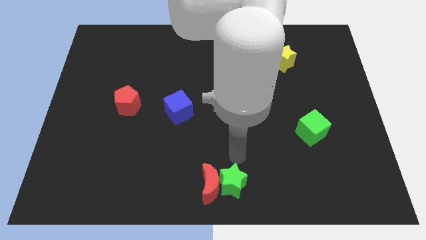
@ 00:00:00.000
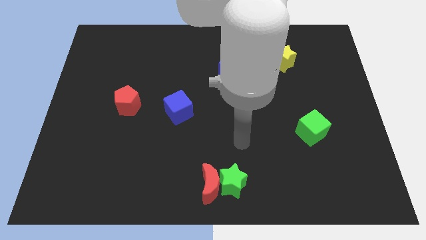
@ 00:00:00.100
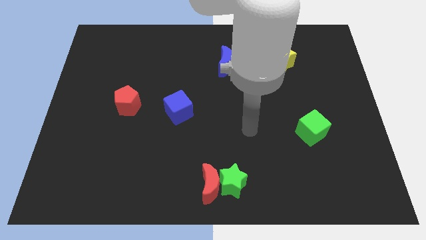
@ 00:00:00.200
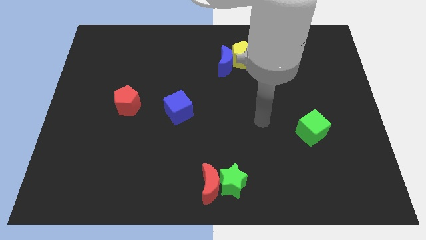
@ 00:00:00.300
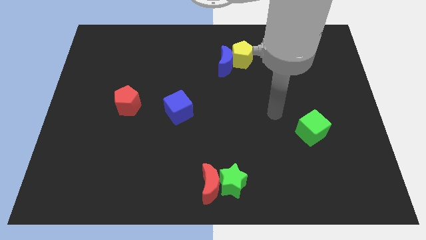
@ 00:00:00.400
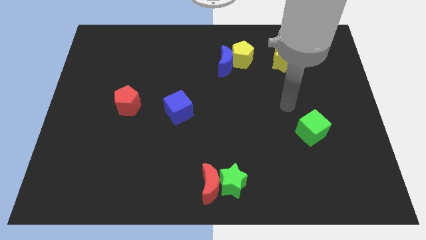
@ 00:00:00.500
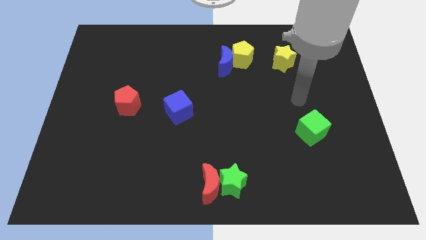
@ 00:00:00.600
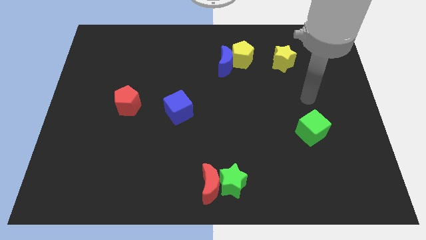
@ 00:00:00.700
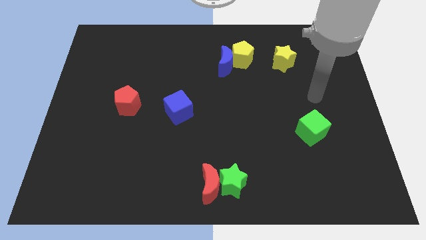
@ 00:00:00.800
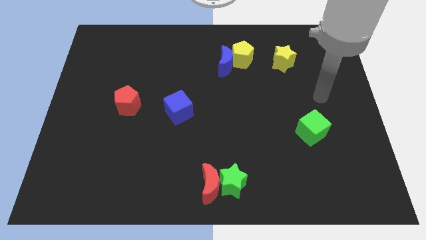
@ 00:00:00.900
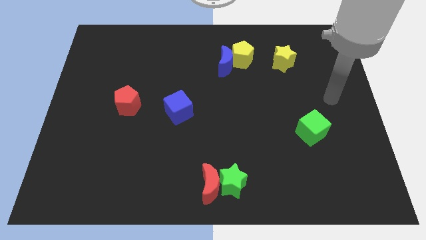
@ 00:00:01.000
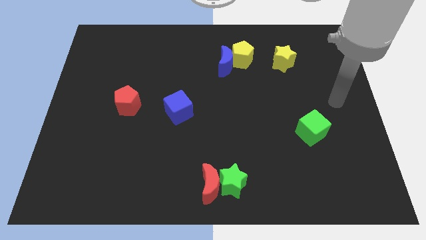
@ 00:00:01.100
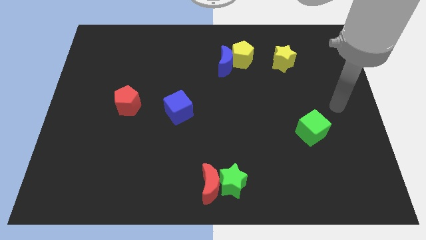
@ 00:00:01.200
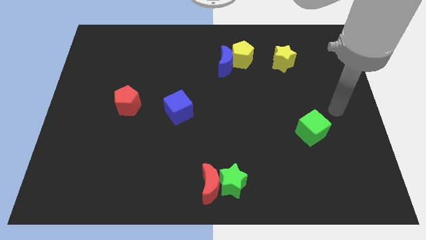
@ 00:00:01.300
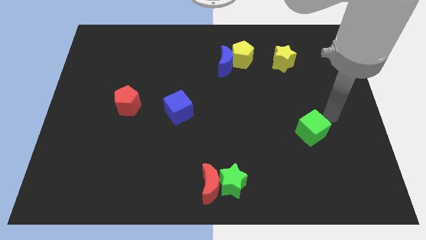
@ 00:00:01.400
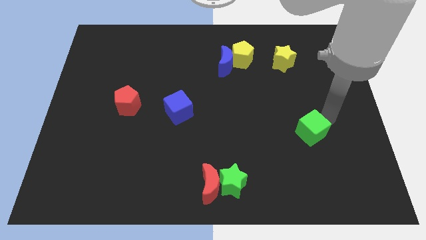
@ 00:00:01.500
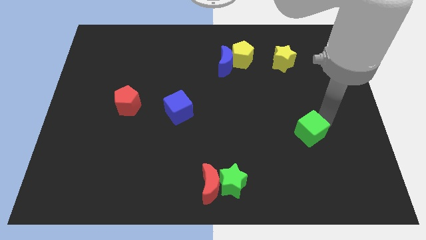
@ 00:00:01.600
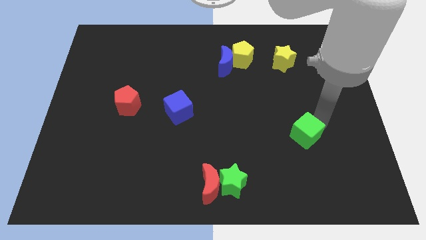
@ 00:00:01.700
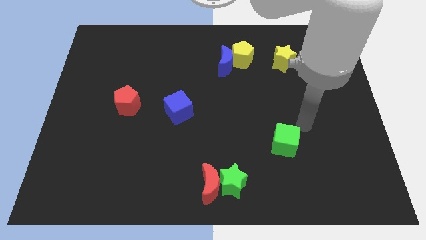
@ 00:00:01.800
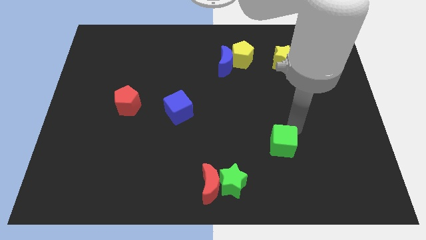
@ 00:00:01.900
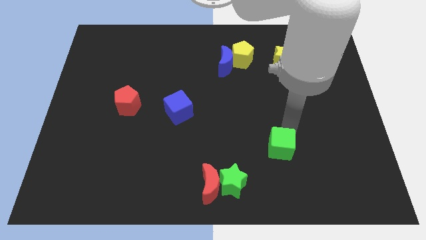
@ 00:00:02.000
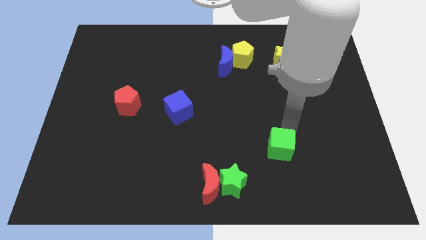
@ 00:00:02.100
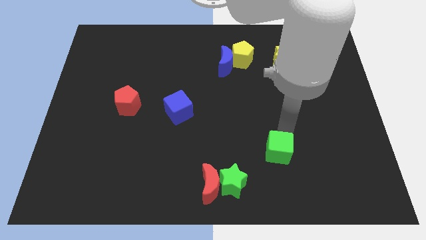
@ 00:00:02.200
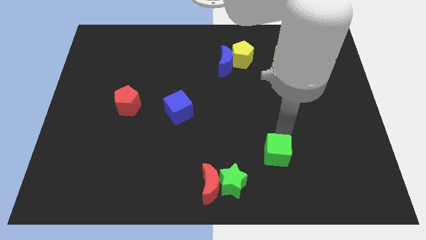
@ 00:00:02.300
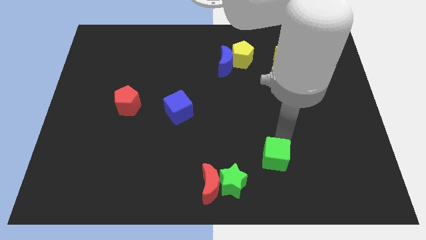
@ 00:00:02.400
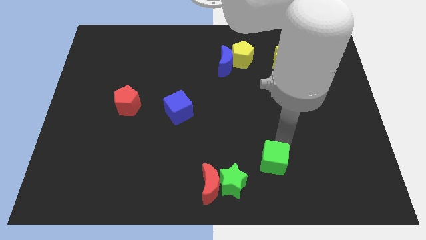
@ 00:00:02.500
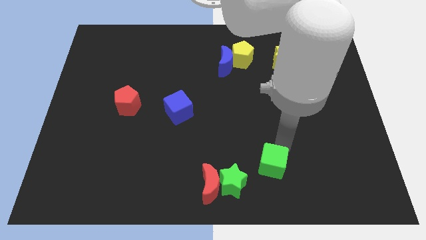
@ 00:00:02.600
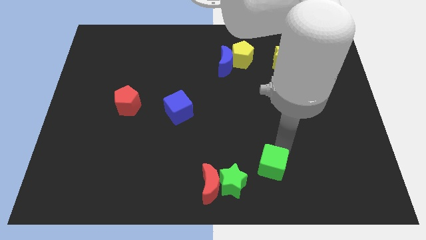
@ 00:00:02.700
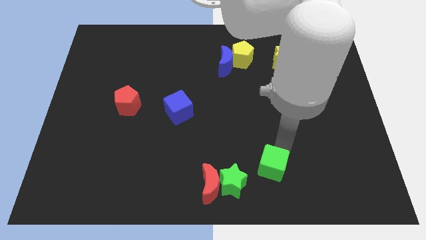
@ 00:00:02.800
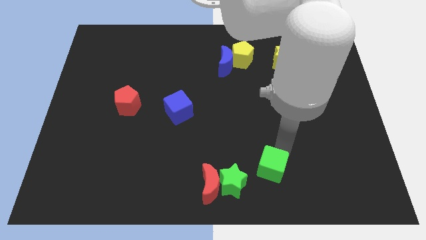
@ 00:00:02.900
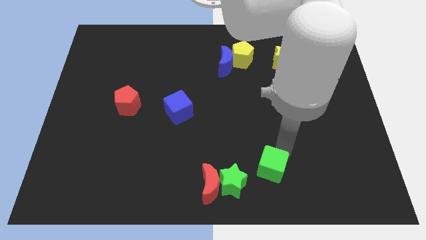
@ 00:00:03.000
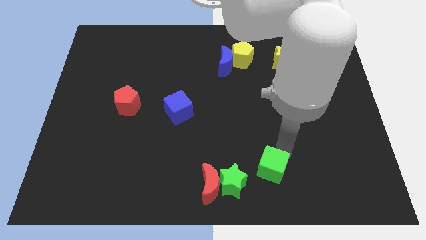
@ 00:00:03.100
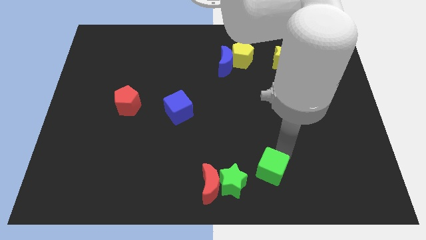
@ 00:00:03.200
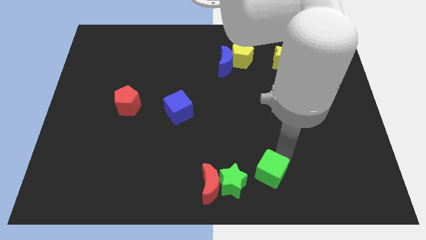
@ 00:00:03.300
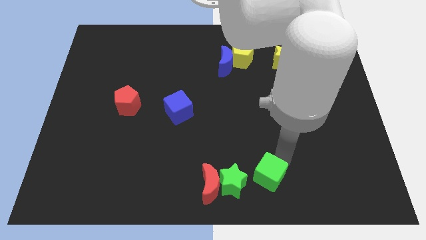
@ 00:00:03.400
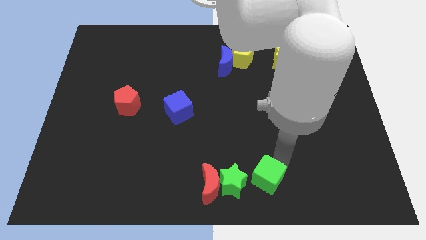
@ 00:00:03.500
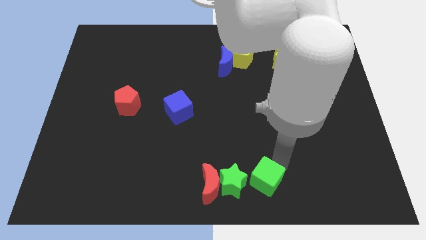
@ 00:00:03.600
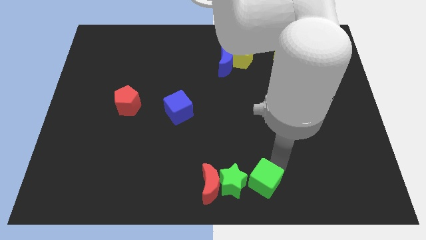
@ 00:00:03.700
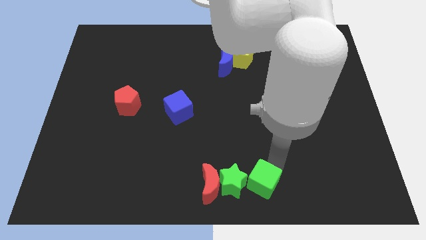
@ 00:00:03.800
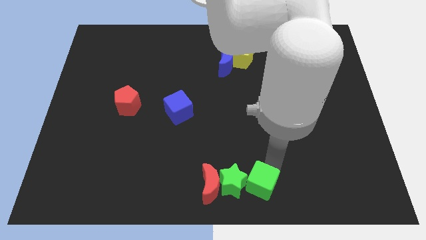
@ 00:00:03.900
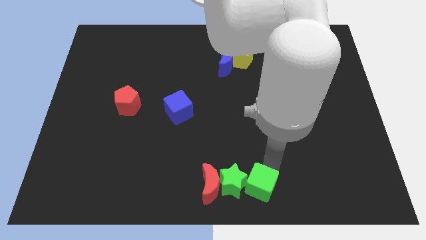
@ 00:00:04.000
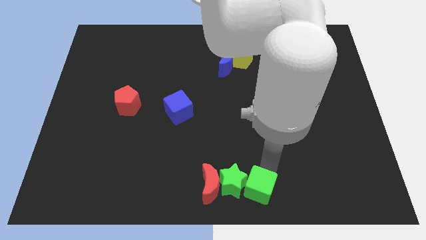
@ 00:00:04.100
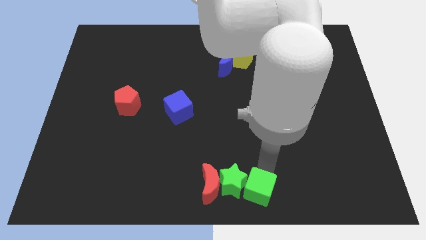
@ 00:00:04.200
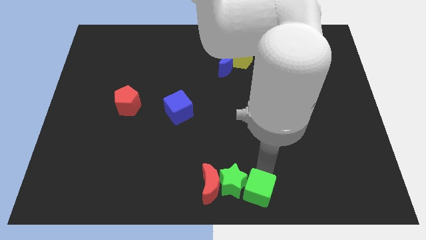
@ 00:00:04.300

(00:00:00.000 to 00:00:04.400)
drag the green cube into the green star

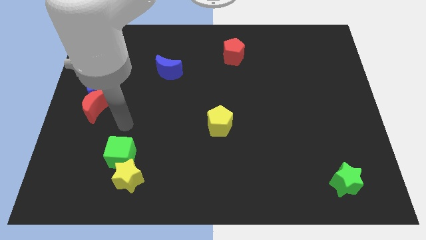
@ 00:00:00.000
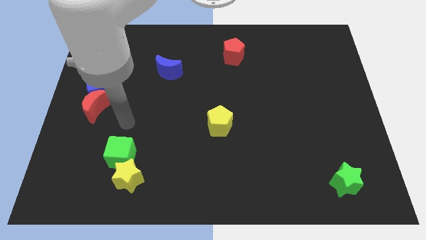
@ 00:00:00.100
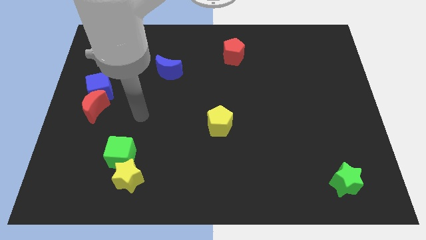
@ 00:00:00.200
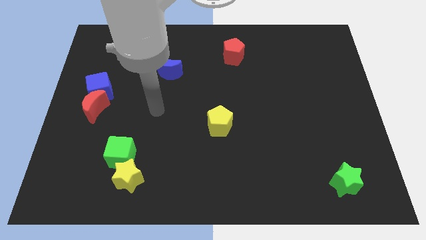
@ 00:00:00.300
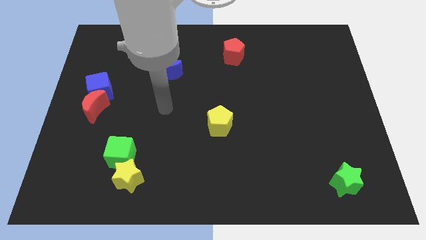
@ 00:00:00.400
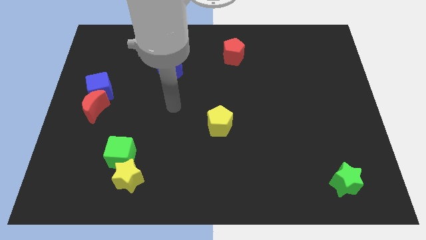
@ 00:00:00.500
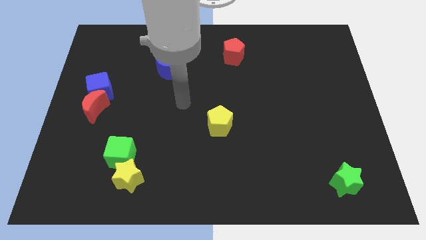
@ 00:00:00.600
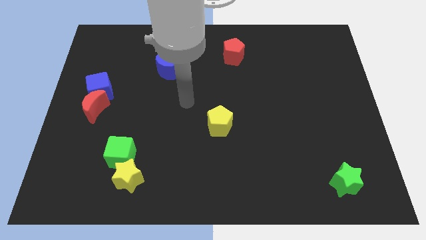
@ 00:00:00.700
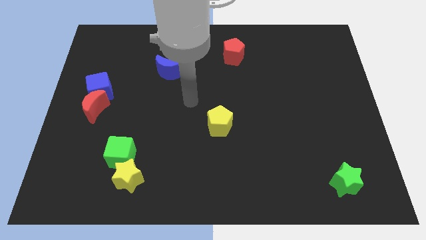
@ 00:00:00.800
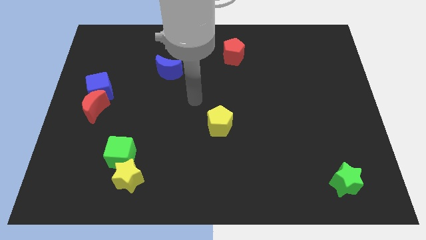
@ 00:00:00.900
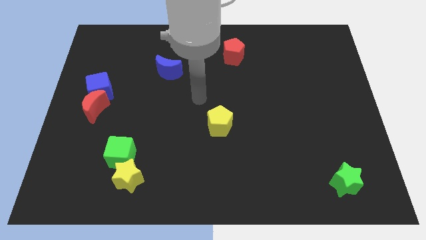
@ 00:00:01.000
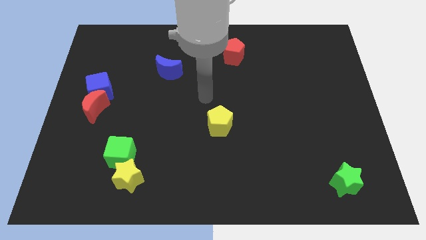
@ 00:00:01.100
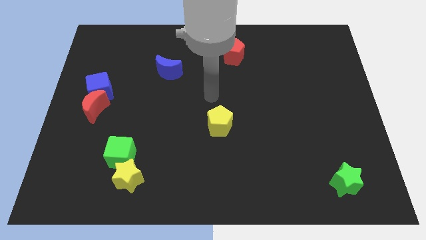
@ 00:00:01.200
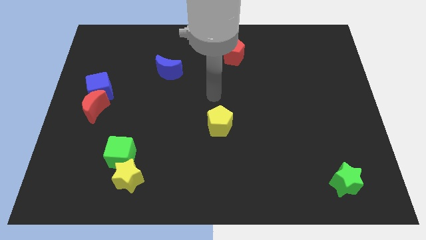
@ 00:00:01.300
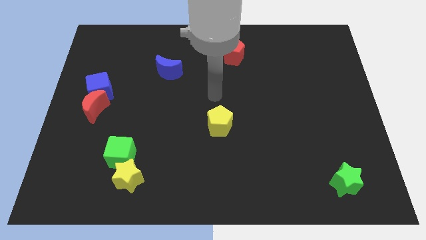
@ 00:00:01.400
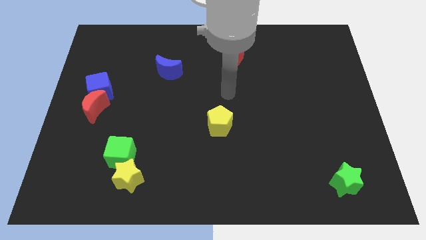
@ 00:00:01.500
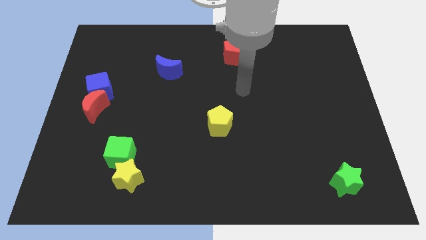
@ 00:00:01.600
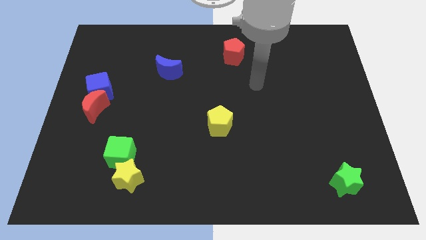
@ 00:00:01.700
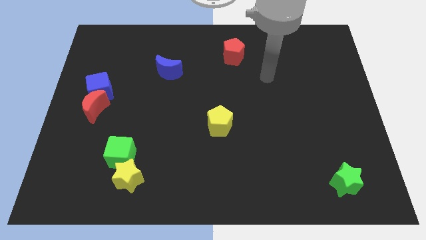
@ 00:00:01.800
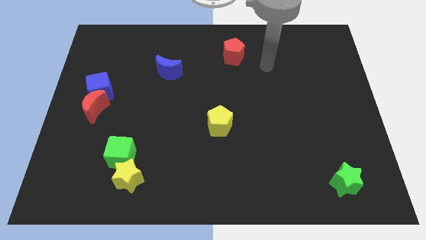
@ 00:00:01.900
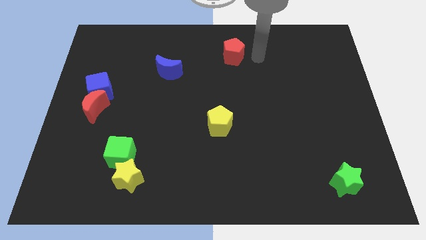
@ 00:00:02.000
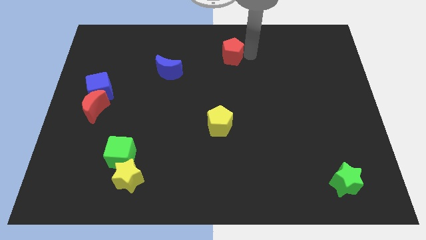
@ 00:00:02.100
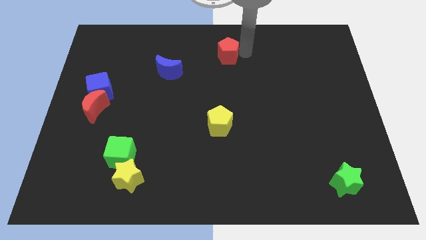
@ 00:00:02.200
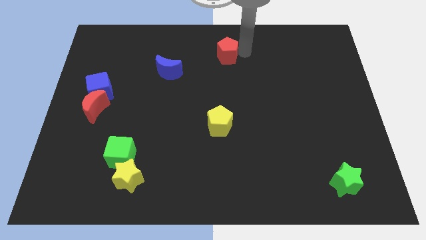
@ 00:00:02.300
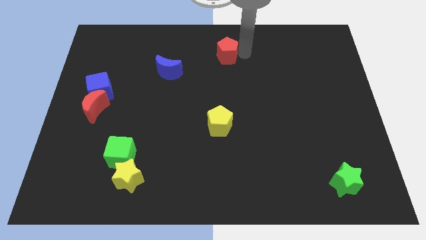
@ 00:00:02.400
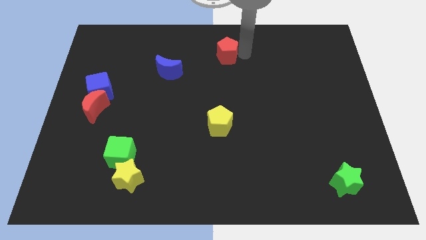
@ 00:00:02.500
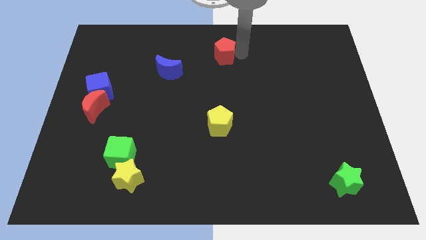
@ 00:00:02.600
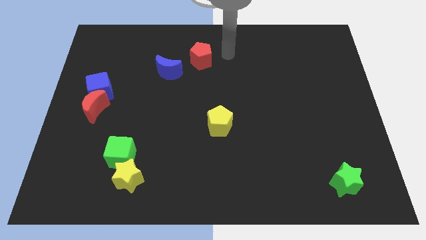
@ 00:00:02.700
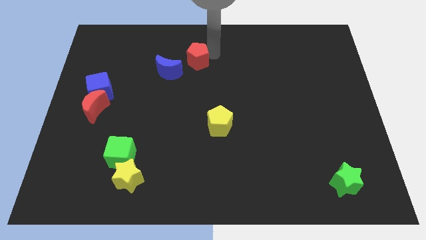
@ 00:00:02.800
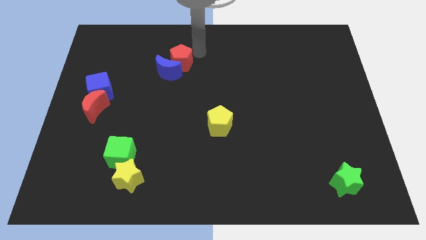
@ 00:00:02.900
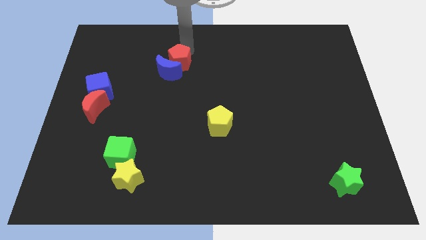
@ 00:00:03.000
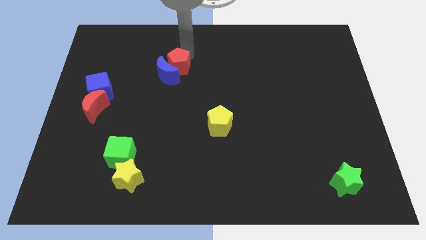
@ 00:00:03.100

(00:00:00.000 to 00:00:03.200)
push the red pentagon into the top side of the blue moon

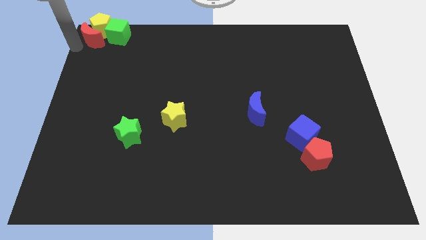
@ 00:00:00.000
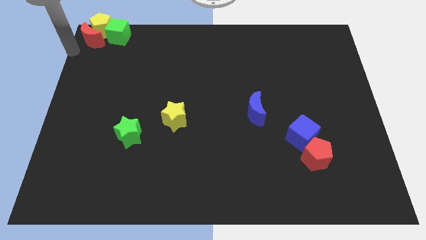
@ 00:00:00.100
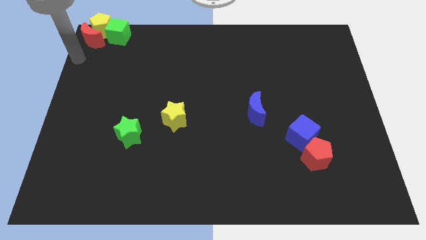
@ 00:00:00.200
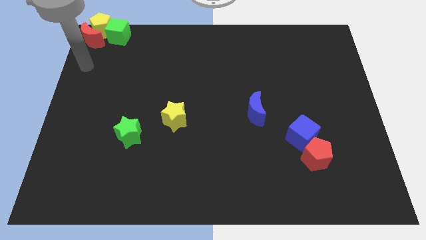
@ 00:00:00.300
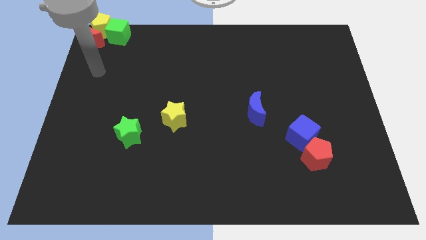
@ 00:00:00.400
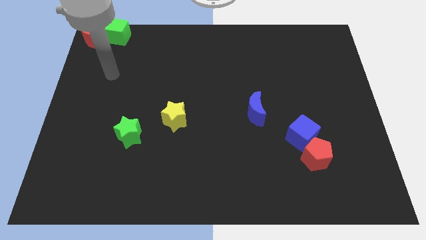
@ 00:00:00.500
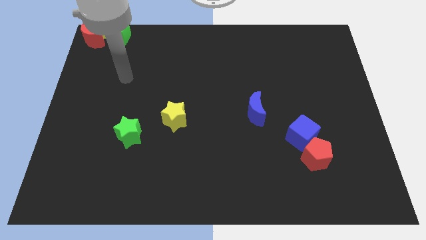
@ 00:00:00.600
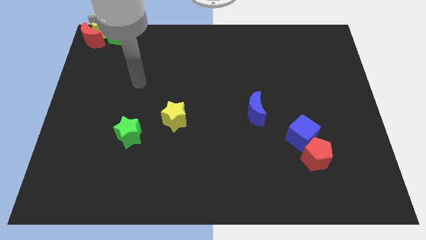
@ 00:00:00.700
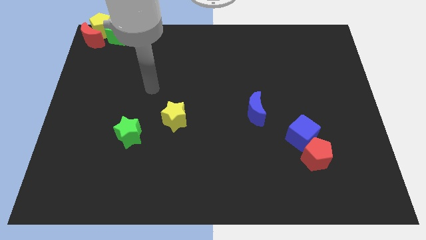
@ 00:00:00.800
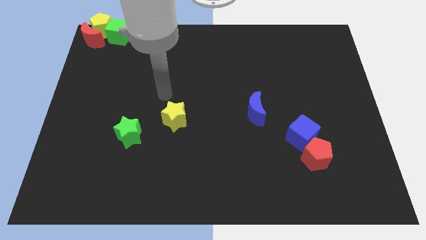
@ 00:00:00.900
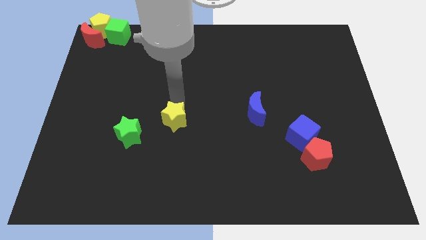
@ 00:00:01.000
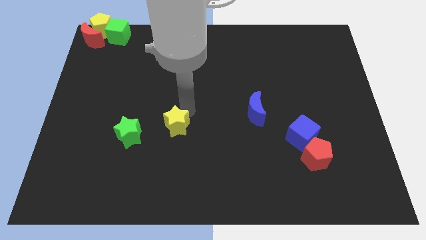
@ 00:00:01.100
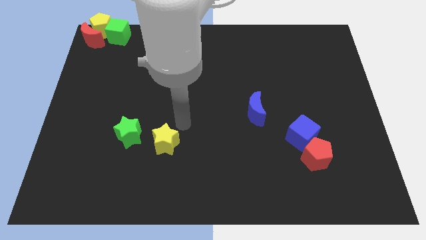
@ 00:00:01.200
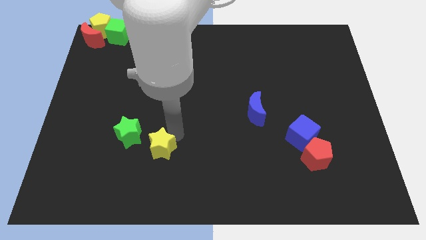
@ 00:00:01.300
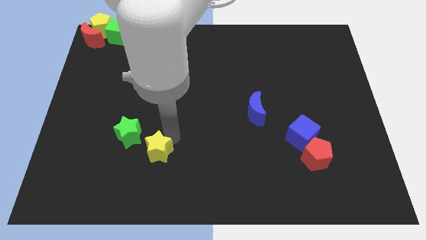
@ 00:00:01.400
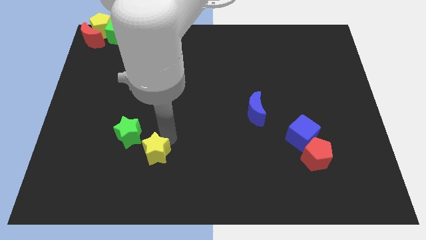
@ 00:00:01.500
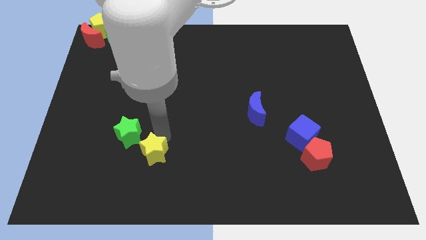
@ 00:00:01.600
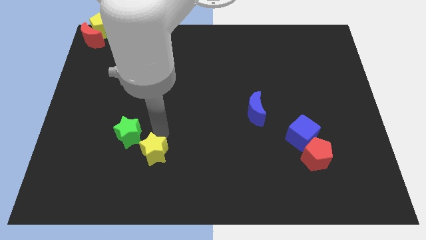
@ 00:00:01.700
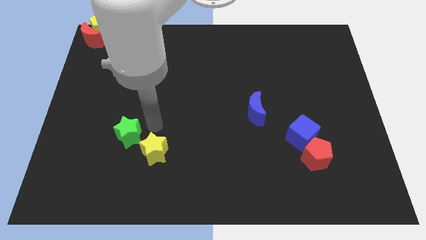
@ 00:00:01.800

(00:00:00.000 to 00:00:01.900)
place the yellow star bottom right of the green star
